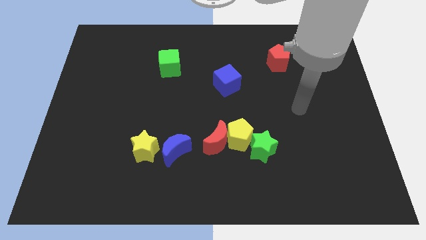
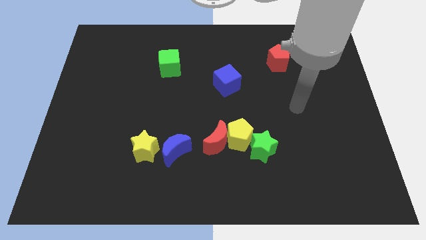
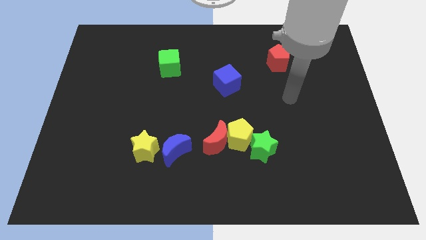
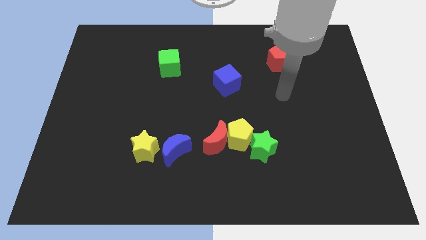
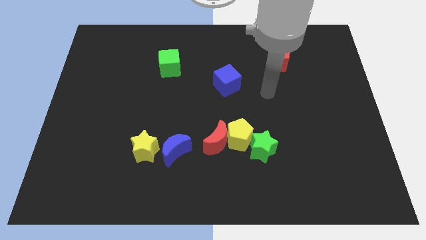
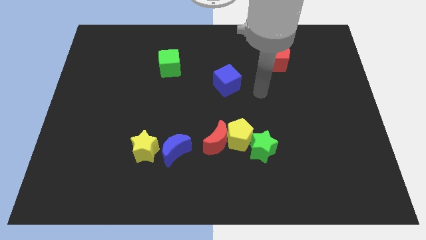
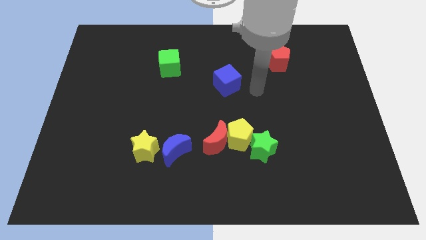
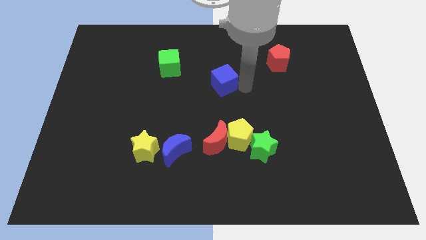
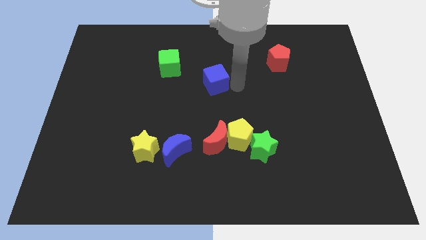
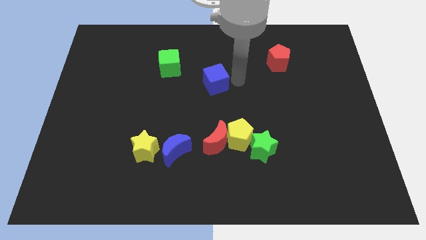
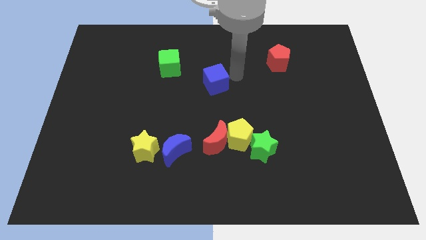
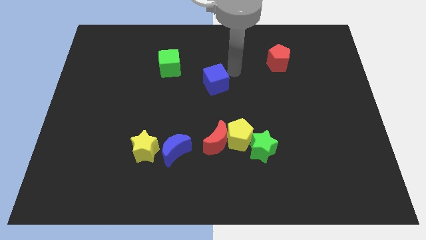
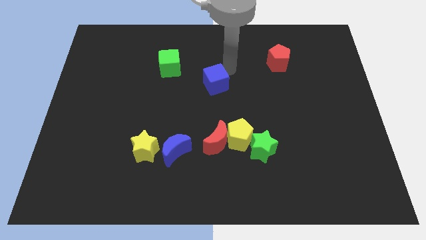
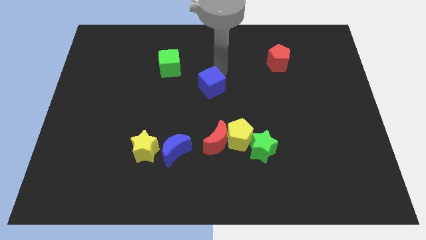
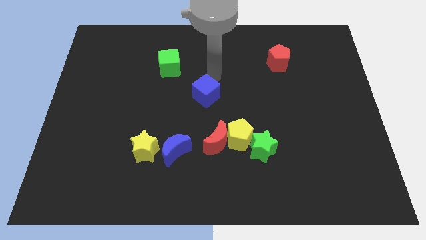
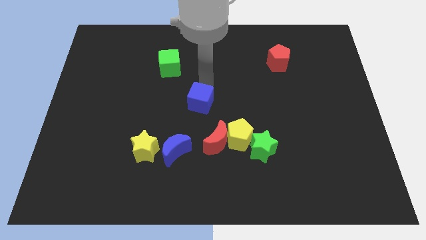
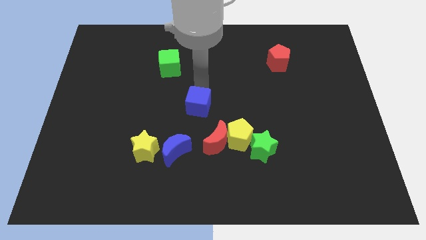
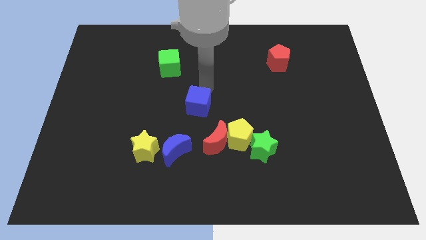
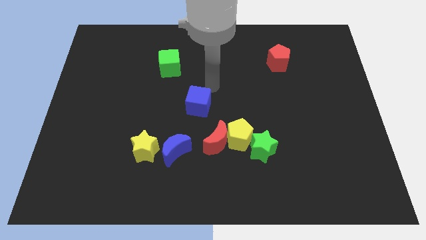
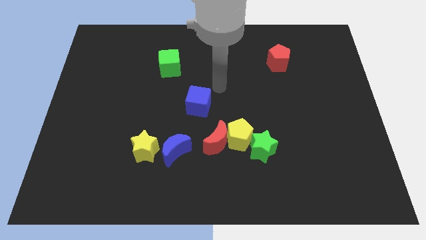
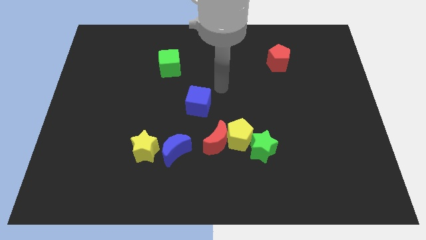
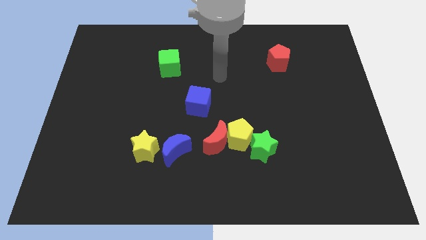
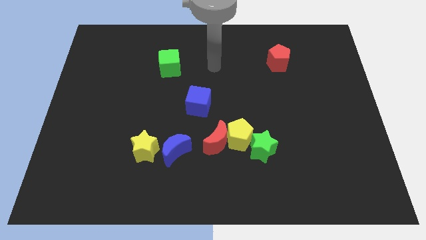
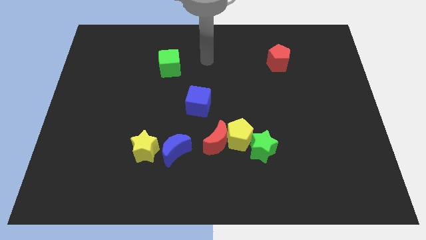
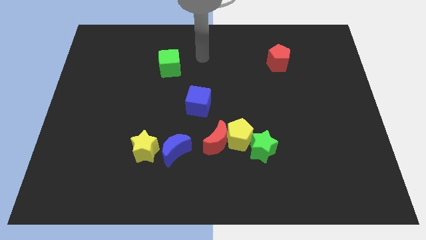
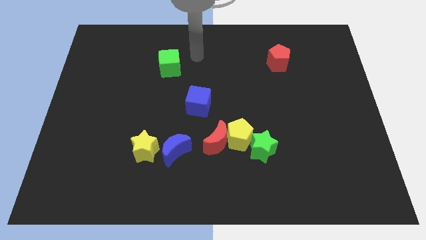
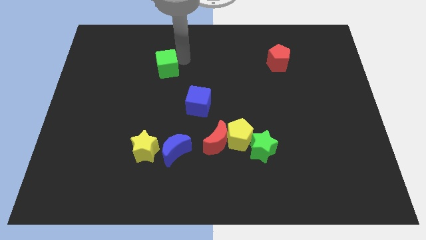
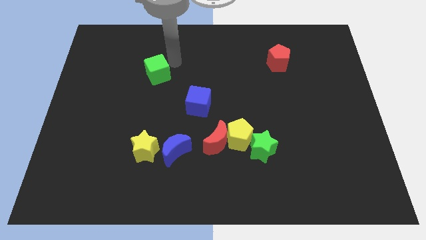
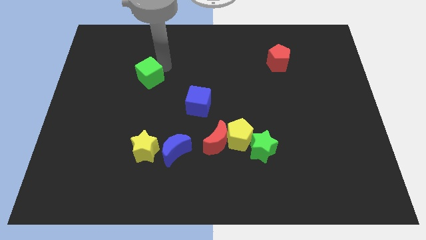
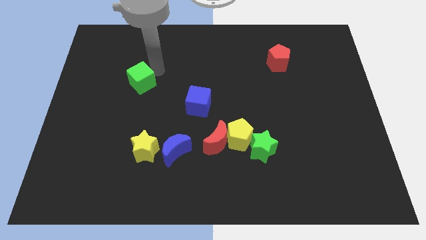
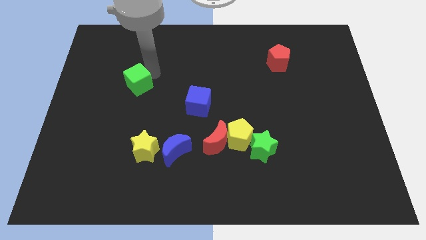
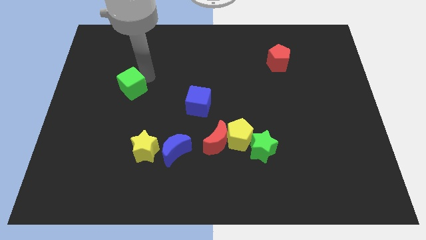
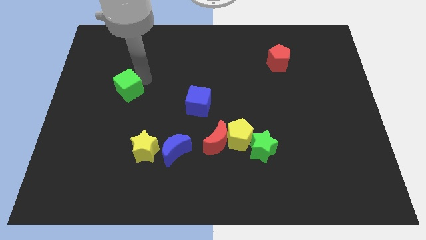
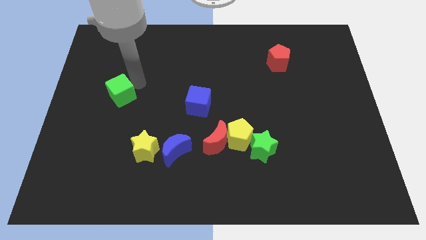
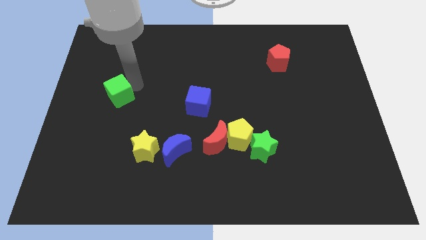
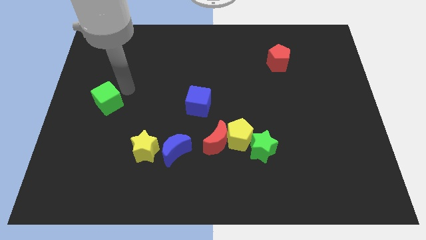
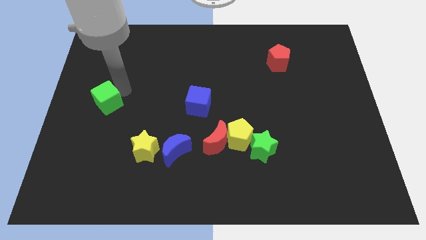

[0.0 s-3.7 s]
move both the blocks horizontal to each other

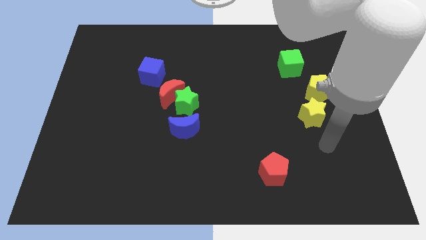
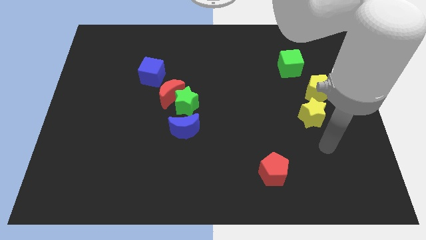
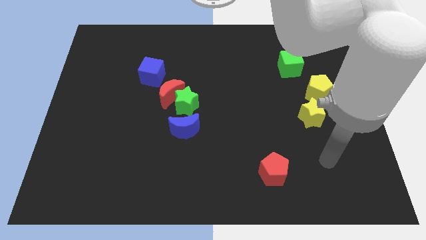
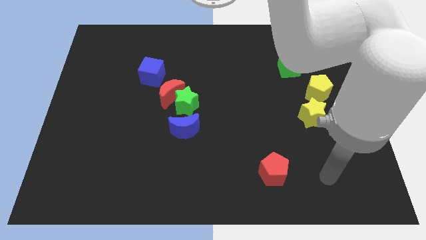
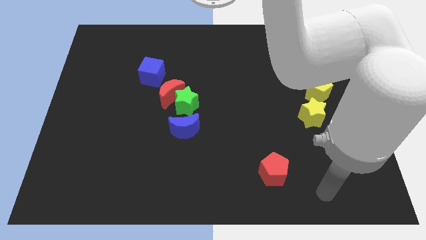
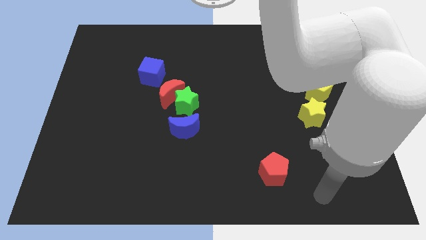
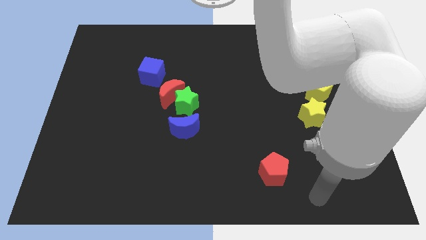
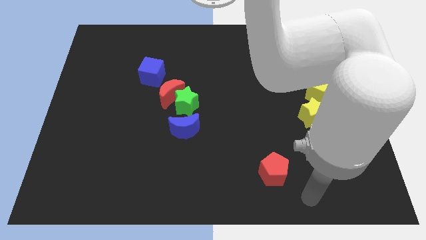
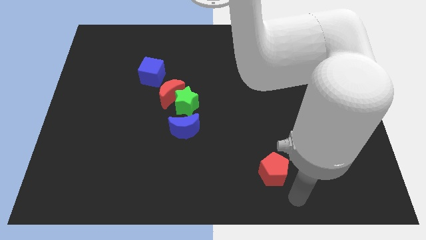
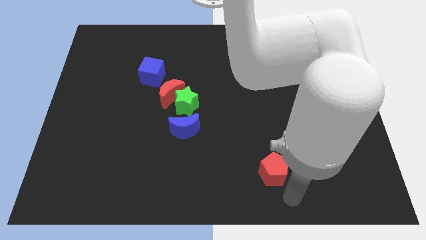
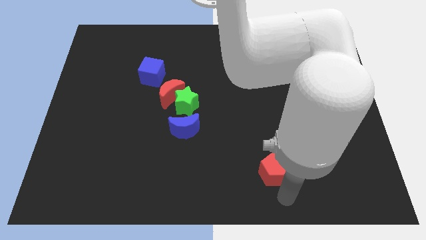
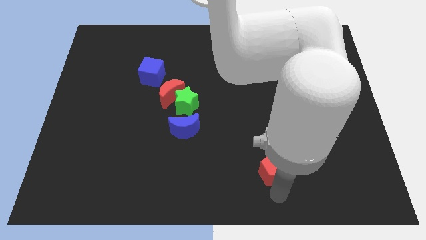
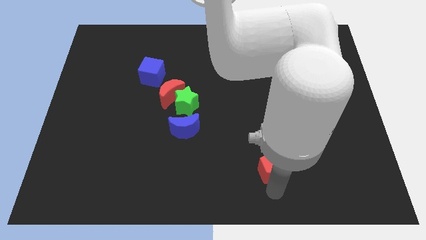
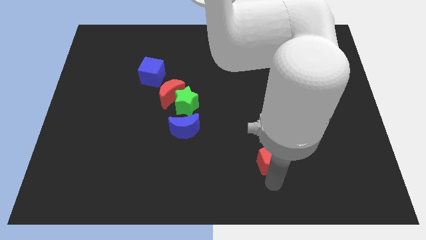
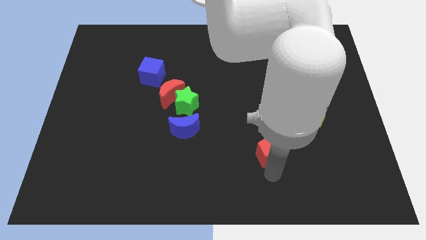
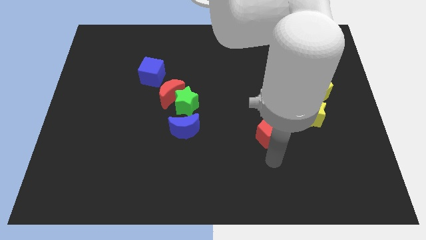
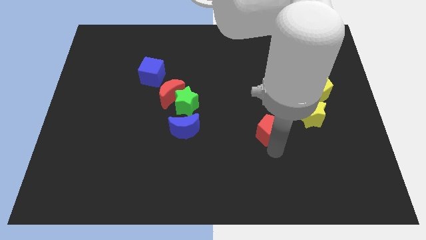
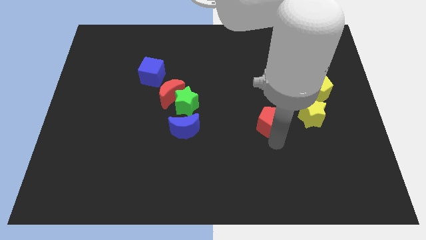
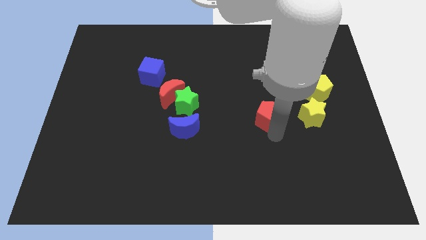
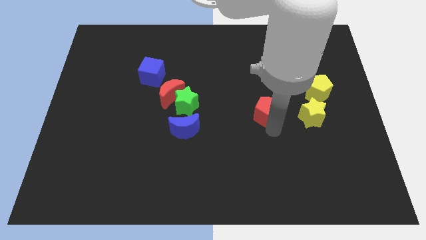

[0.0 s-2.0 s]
place the red pentagon to left side of the yellow star

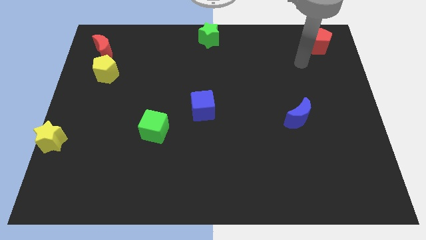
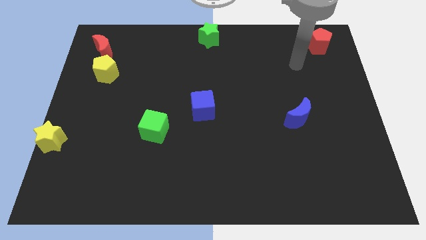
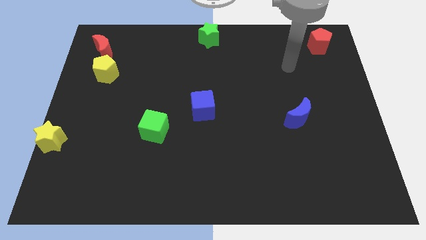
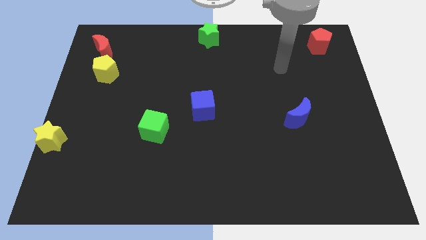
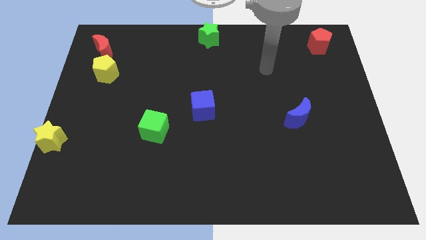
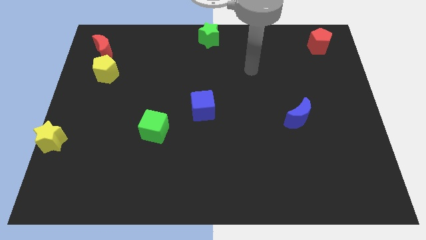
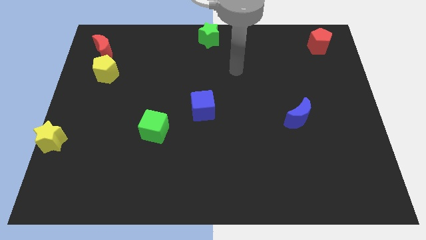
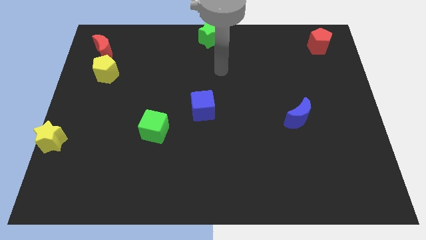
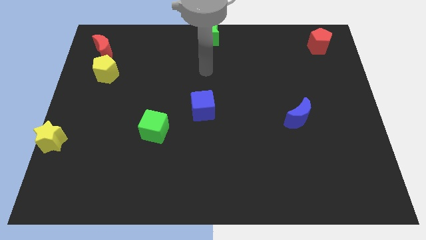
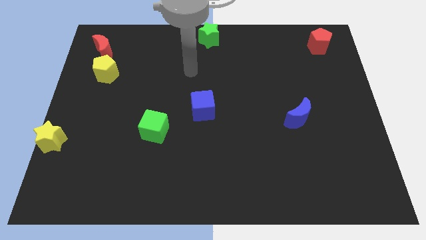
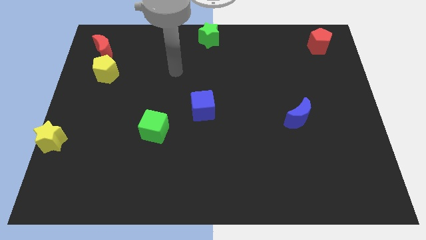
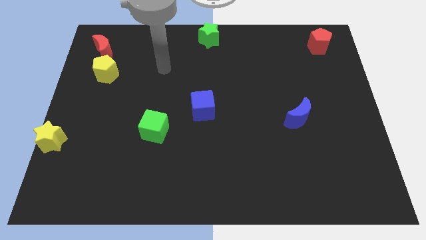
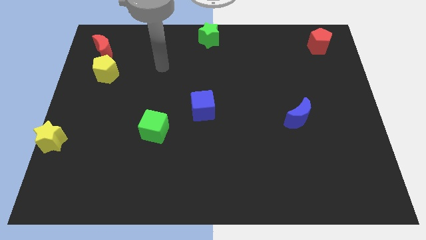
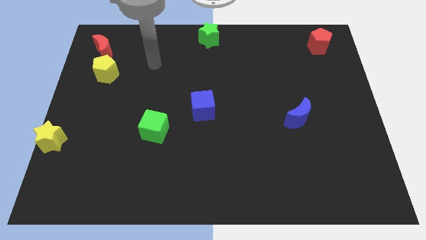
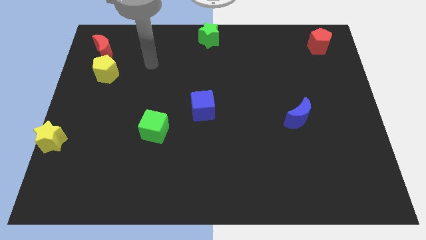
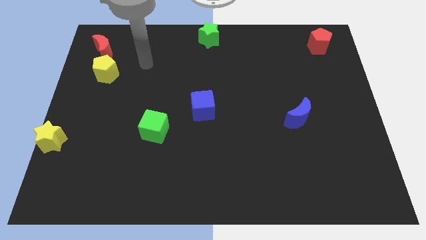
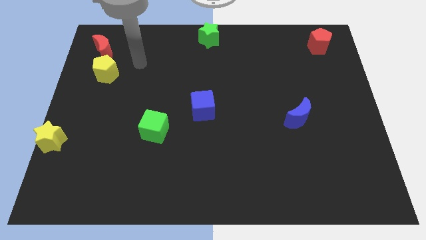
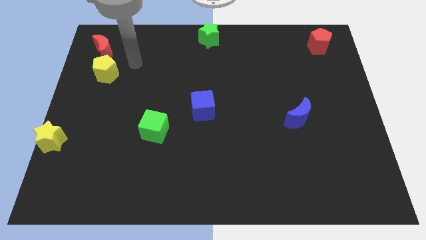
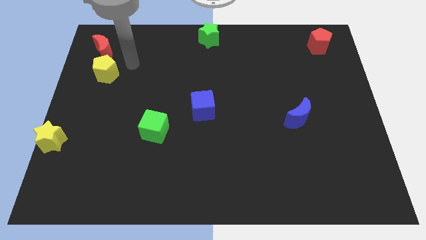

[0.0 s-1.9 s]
point your arm at the right of the yellow pentagon

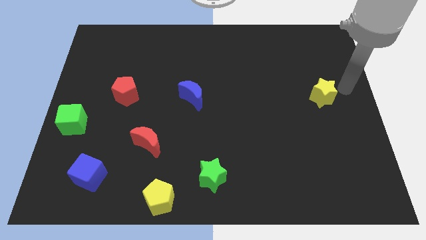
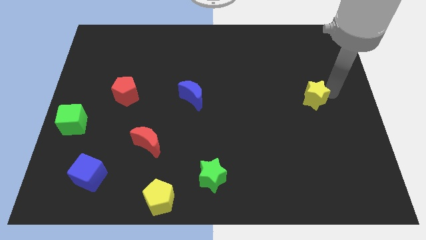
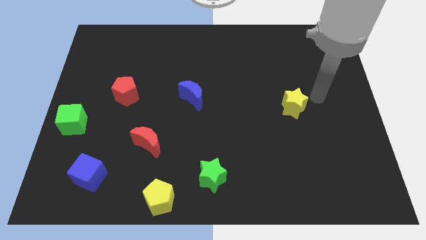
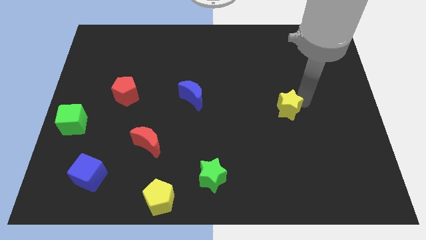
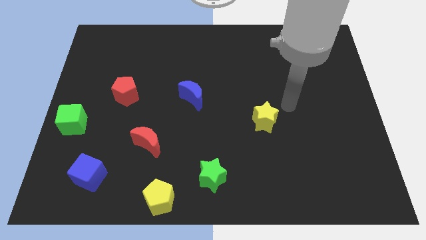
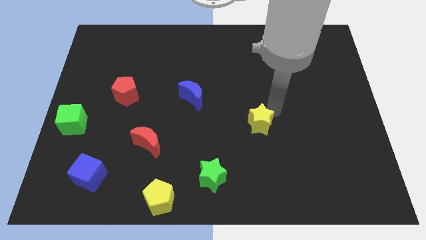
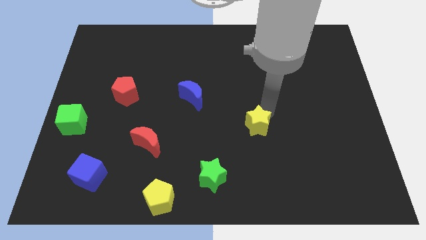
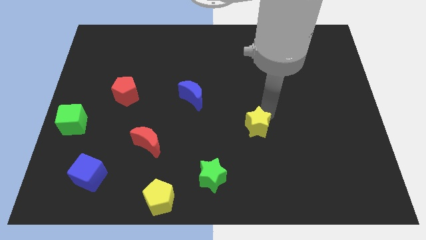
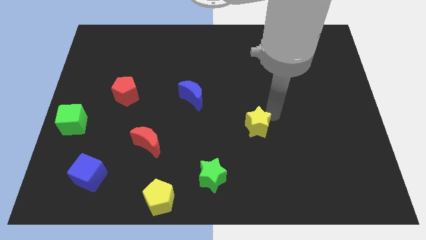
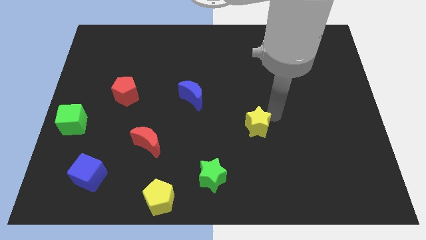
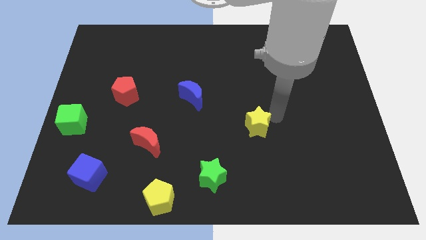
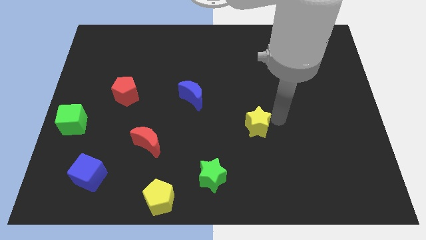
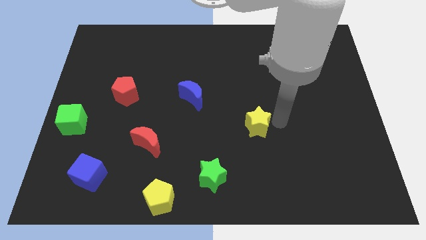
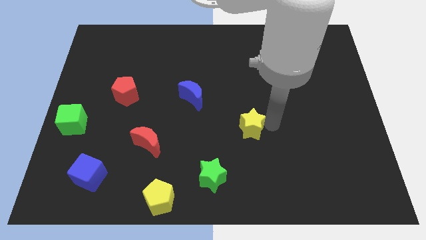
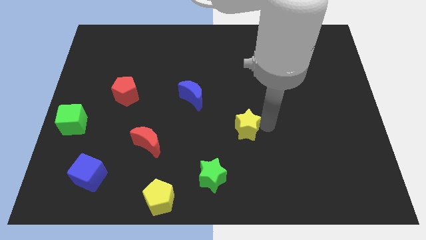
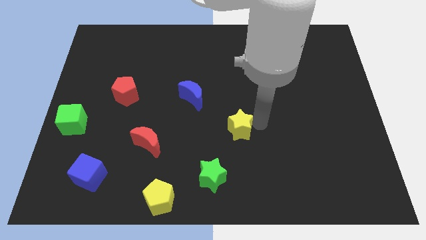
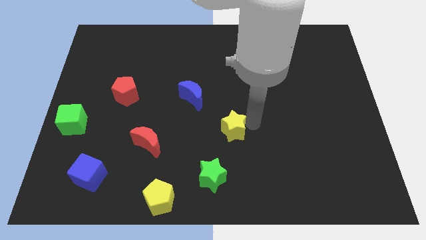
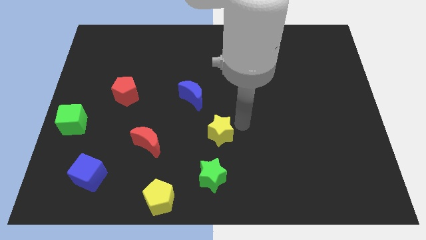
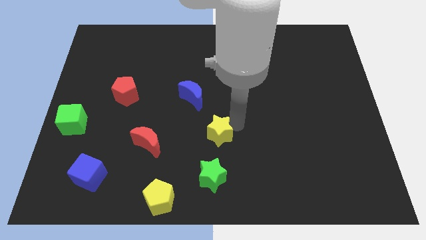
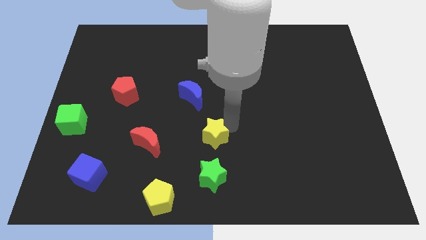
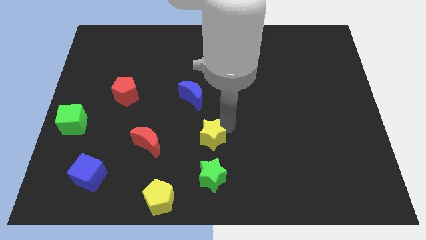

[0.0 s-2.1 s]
move the yellow star above to the green star
